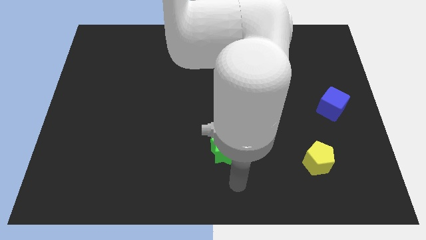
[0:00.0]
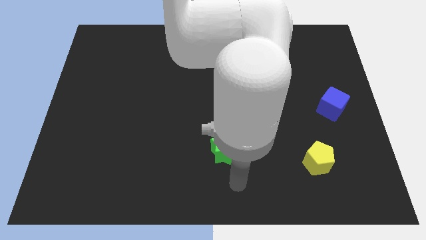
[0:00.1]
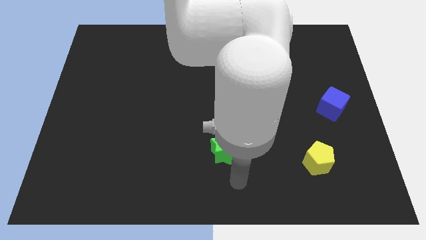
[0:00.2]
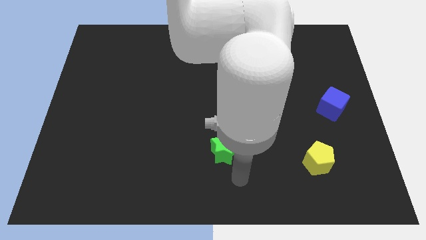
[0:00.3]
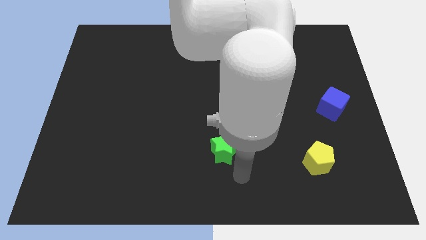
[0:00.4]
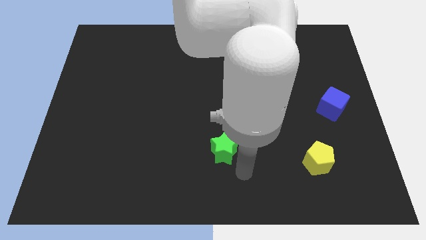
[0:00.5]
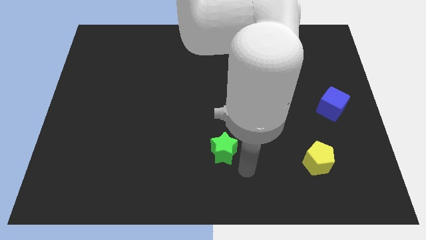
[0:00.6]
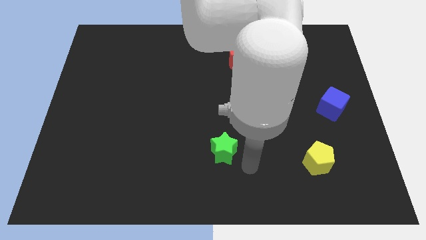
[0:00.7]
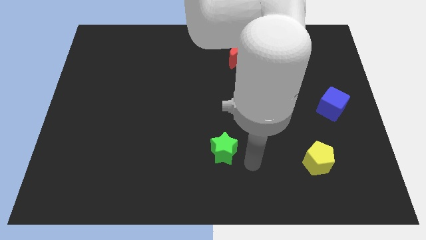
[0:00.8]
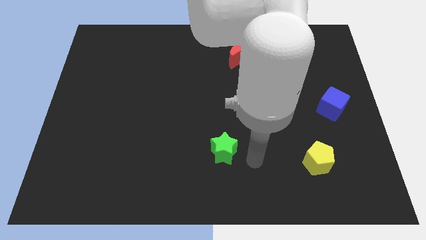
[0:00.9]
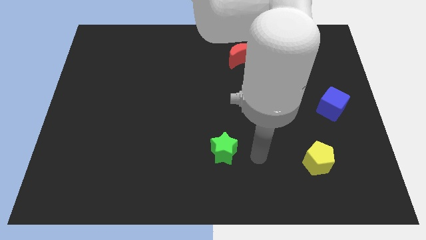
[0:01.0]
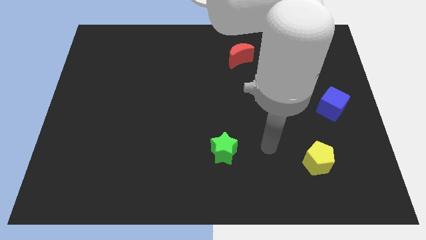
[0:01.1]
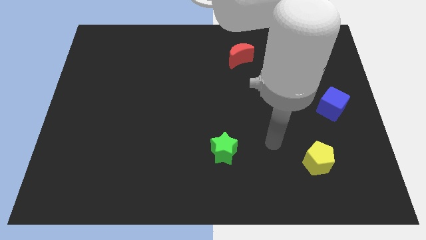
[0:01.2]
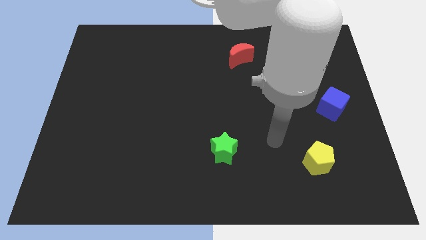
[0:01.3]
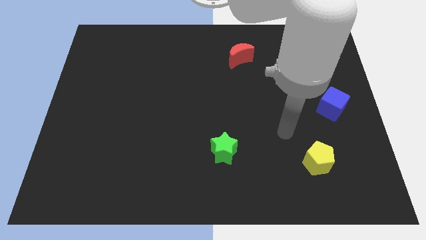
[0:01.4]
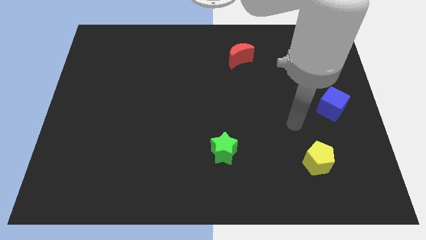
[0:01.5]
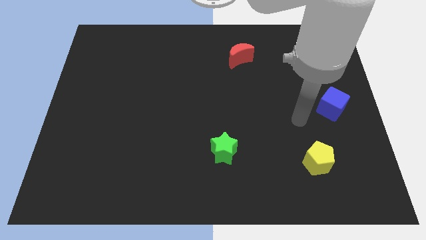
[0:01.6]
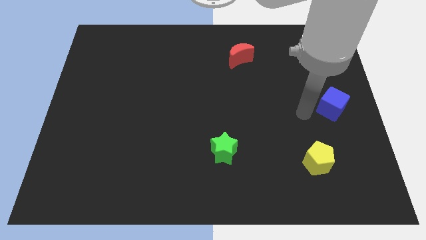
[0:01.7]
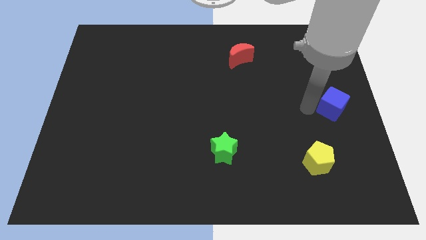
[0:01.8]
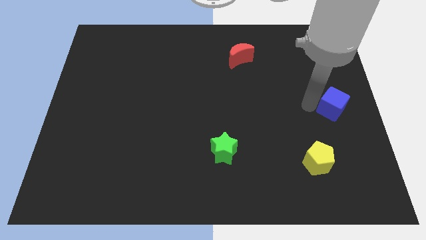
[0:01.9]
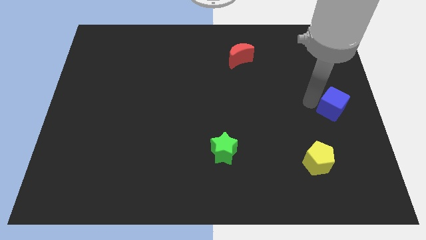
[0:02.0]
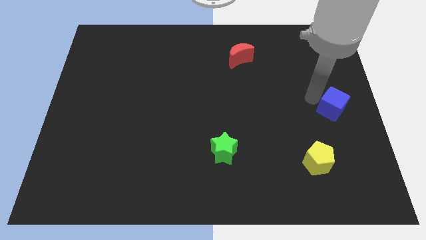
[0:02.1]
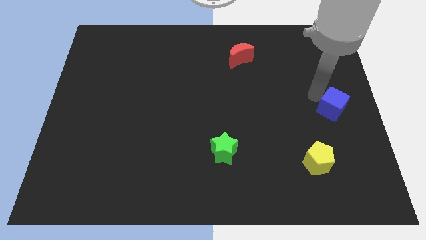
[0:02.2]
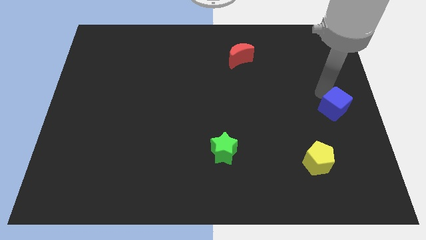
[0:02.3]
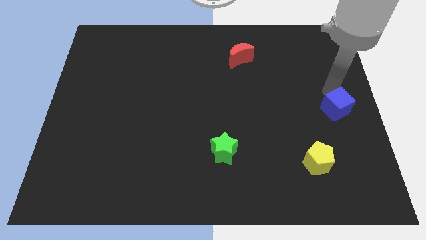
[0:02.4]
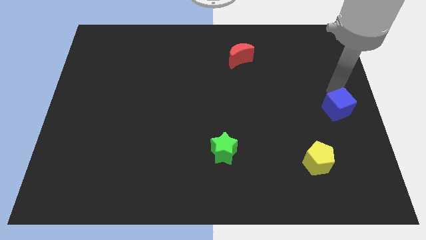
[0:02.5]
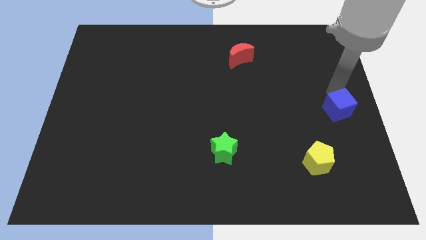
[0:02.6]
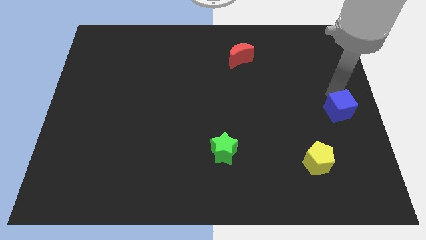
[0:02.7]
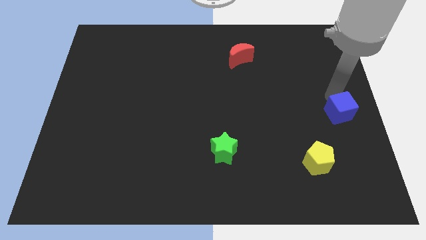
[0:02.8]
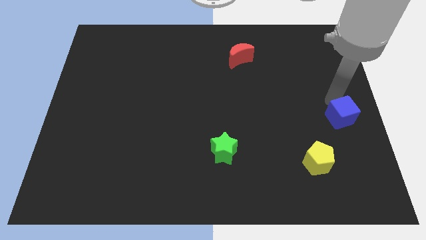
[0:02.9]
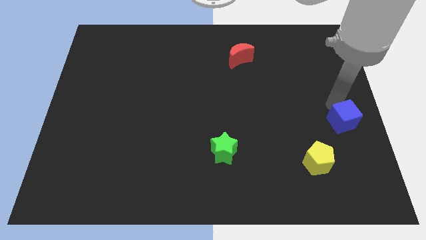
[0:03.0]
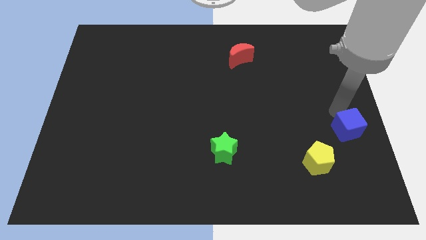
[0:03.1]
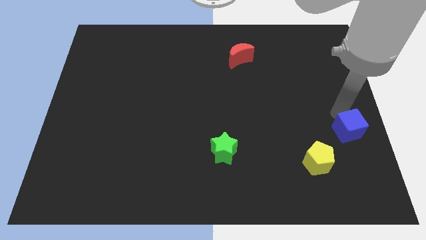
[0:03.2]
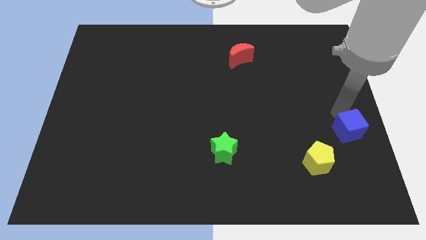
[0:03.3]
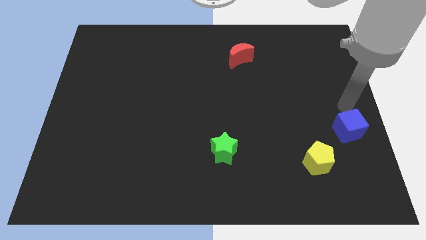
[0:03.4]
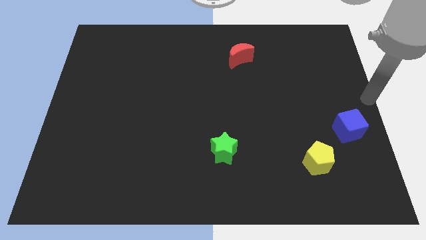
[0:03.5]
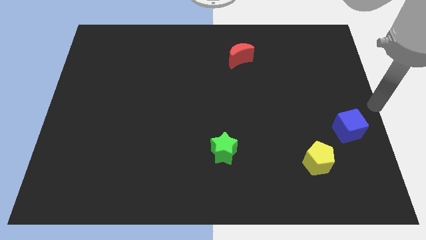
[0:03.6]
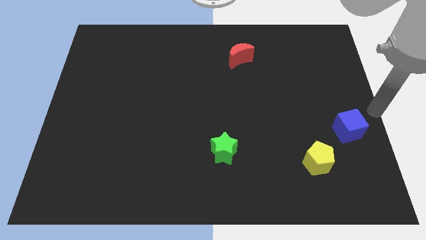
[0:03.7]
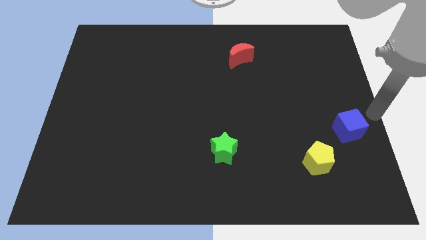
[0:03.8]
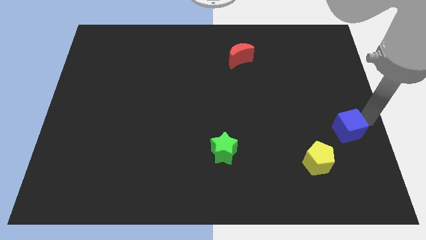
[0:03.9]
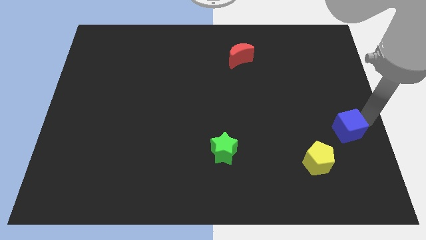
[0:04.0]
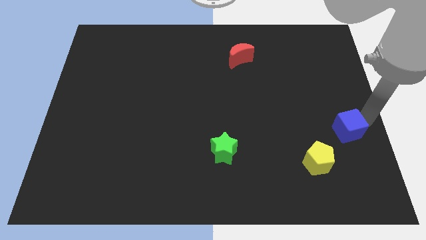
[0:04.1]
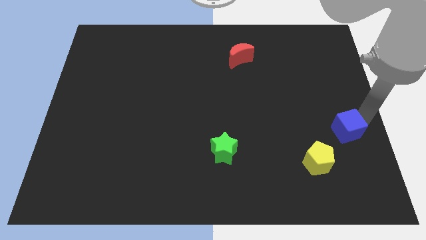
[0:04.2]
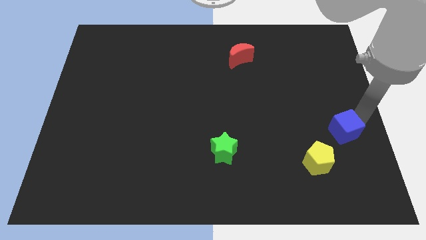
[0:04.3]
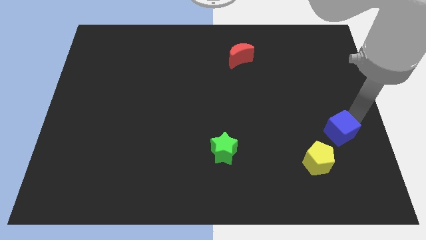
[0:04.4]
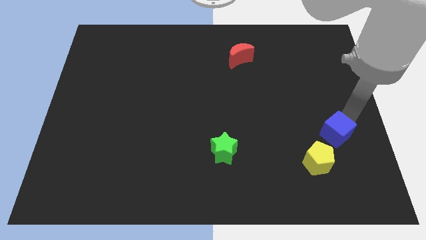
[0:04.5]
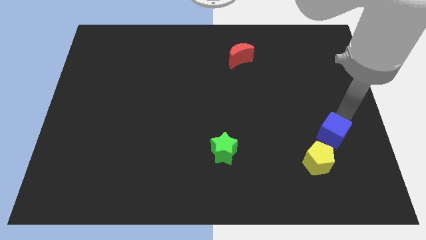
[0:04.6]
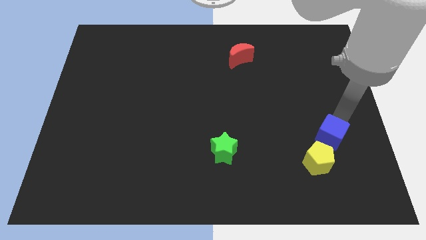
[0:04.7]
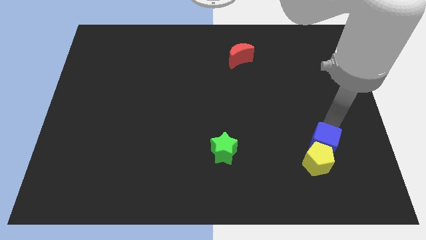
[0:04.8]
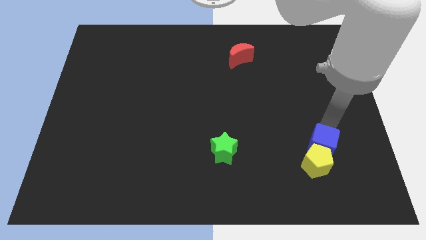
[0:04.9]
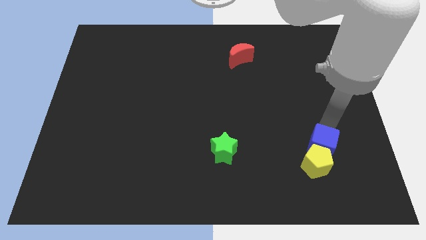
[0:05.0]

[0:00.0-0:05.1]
push the cube close to the pentagon

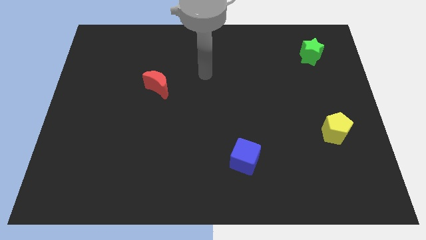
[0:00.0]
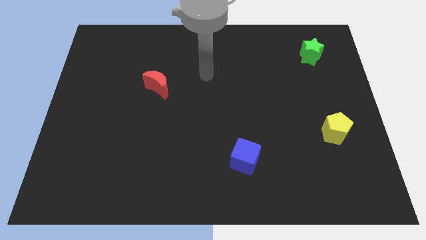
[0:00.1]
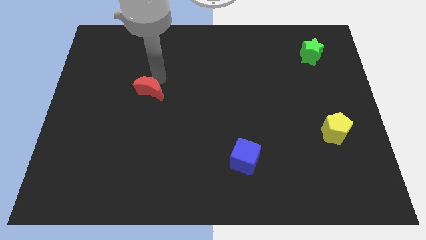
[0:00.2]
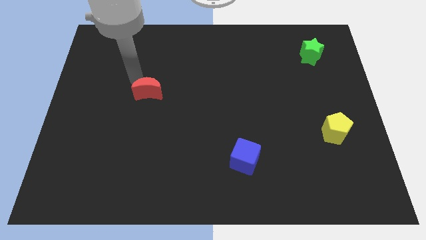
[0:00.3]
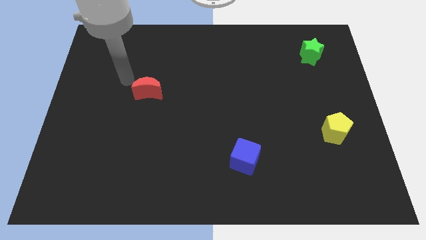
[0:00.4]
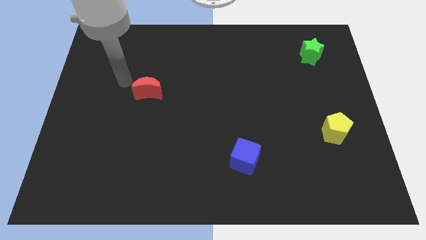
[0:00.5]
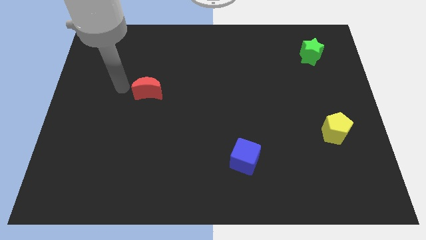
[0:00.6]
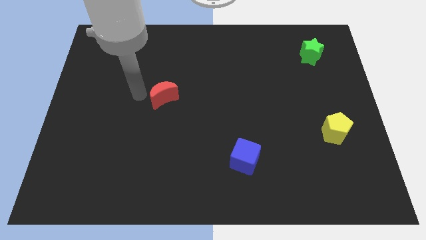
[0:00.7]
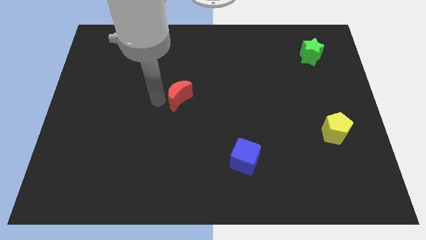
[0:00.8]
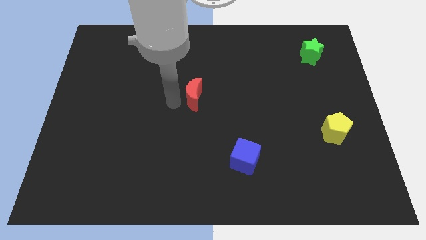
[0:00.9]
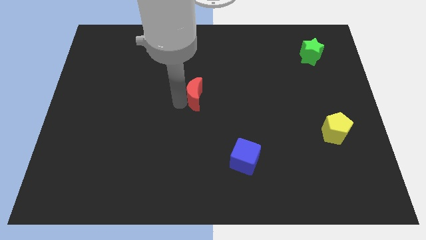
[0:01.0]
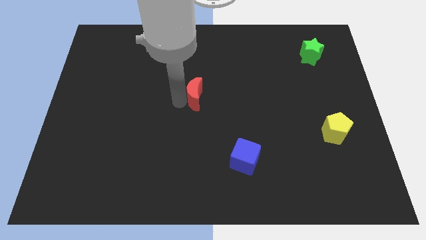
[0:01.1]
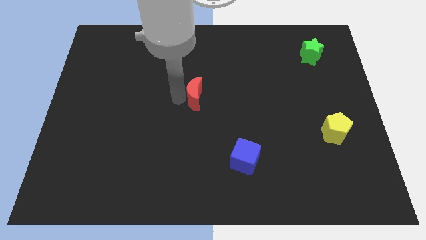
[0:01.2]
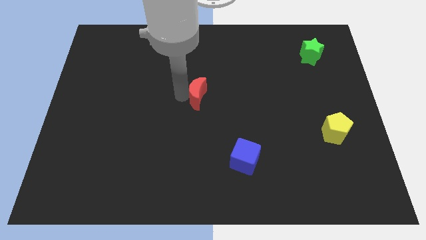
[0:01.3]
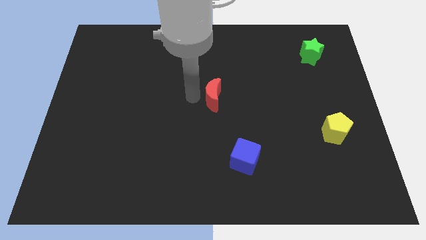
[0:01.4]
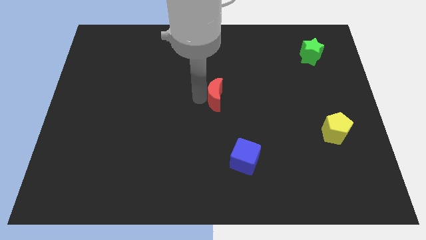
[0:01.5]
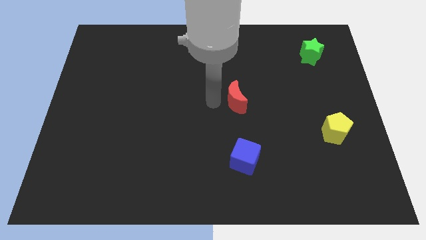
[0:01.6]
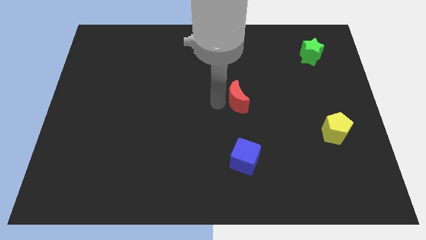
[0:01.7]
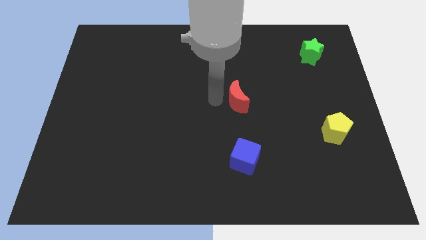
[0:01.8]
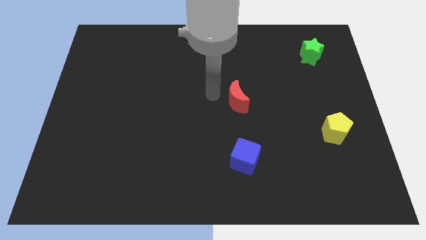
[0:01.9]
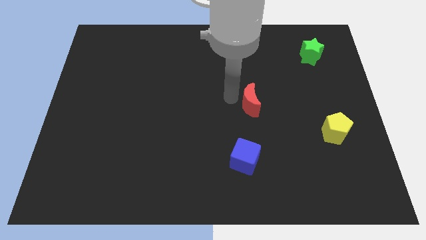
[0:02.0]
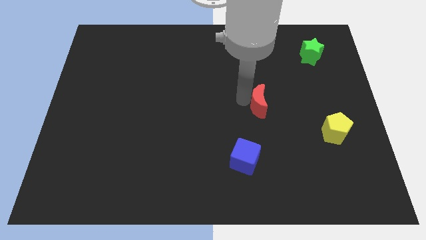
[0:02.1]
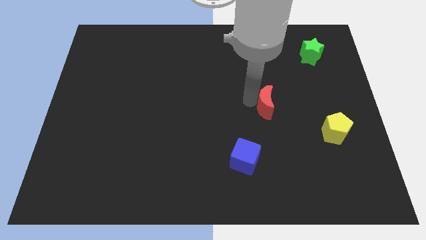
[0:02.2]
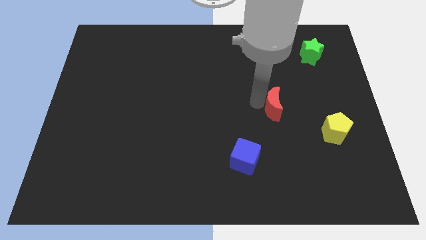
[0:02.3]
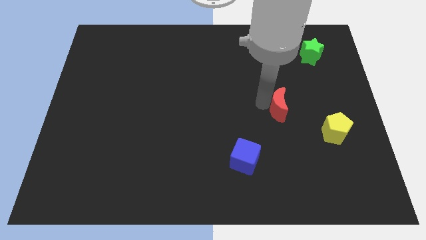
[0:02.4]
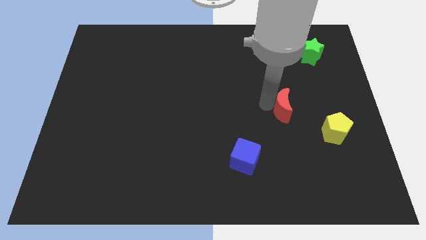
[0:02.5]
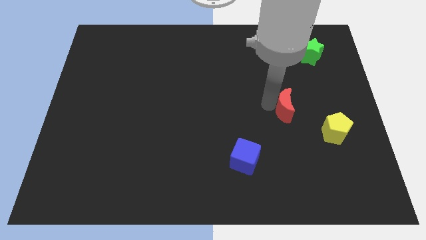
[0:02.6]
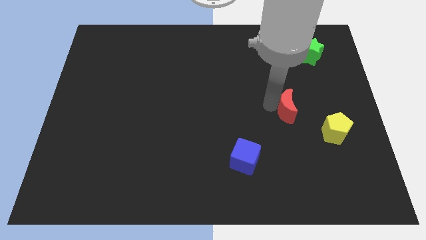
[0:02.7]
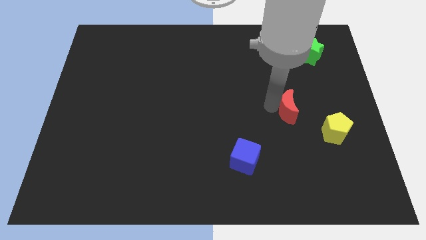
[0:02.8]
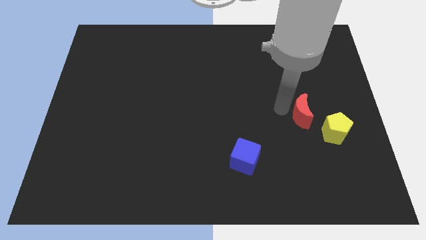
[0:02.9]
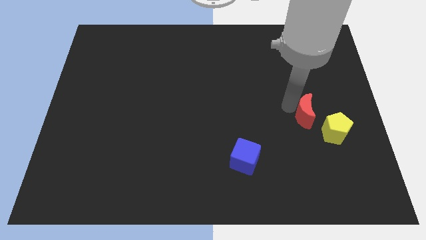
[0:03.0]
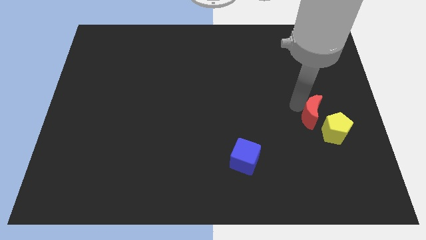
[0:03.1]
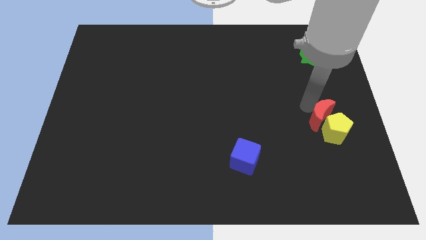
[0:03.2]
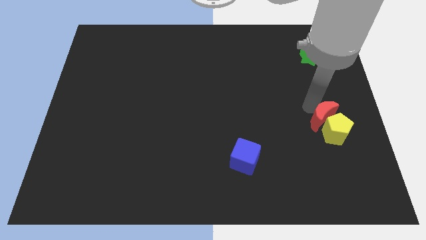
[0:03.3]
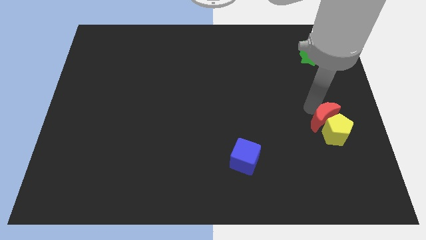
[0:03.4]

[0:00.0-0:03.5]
push the red moon close to the yellow pentagon

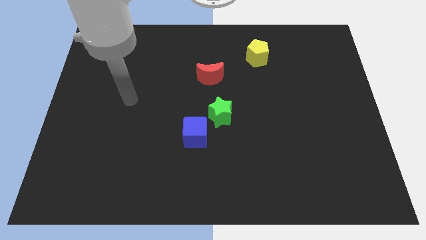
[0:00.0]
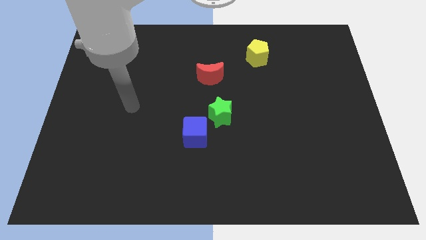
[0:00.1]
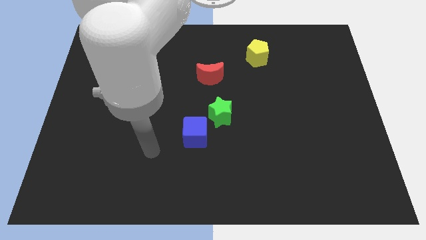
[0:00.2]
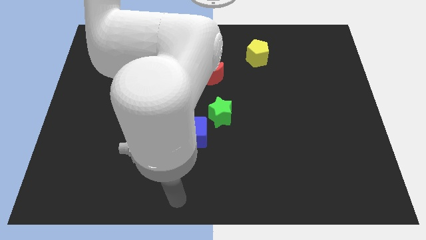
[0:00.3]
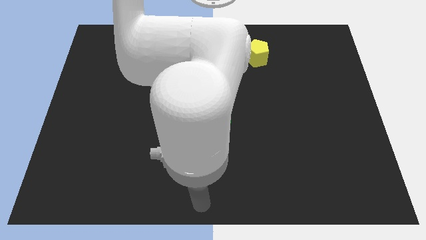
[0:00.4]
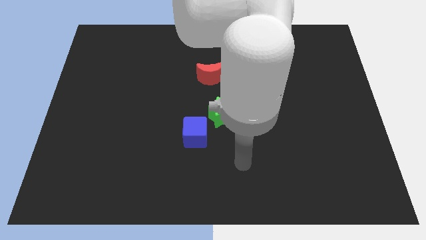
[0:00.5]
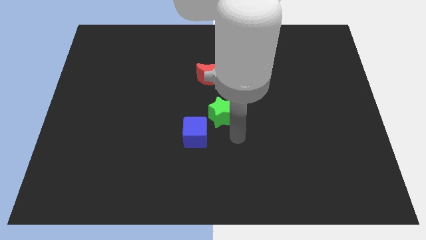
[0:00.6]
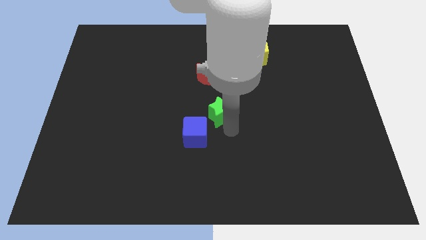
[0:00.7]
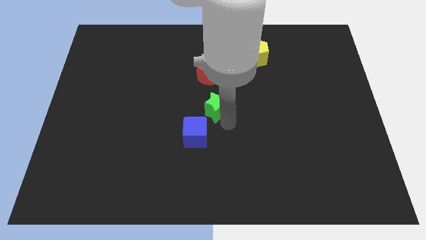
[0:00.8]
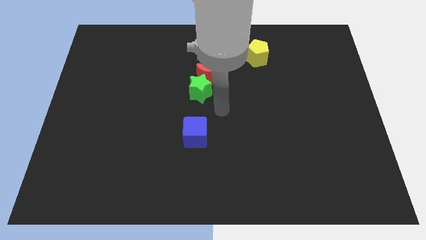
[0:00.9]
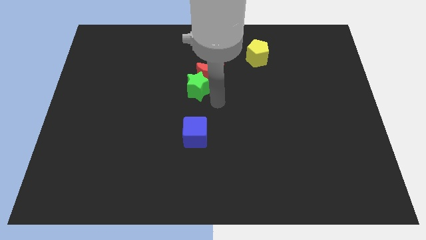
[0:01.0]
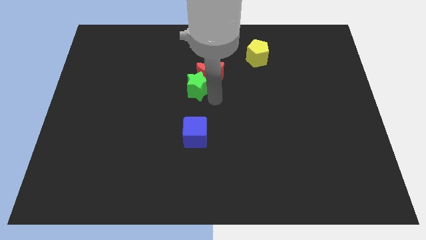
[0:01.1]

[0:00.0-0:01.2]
move the green star to the red moon
